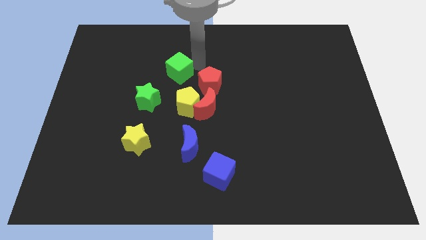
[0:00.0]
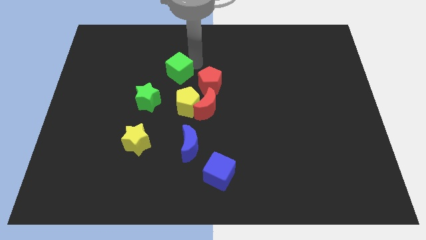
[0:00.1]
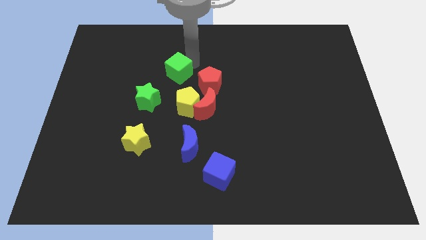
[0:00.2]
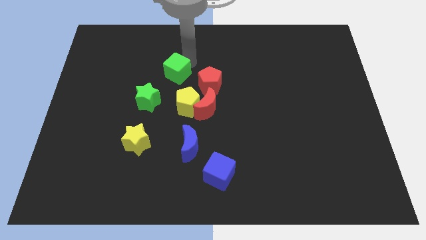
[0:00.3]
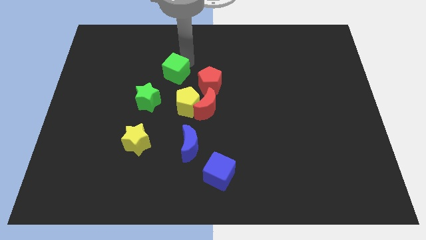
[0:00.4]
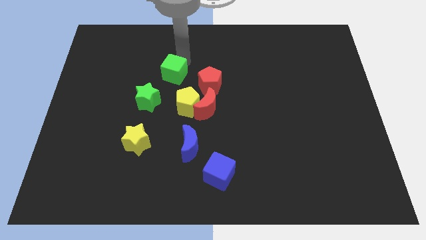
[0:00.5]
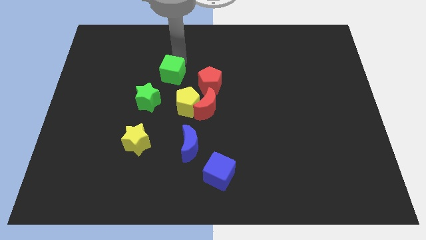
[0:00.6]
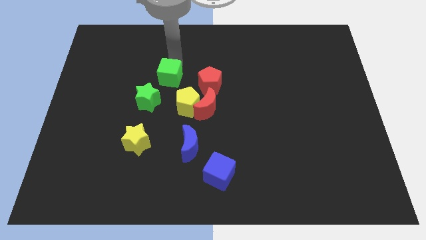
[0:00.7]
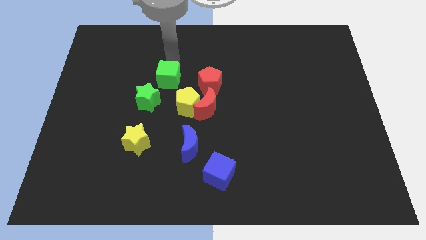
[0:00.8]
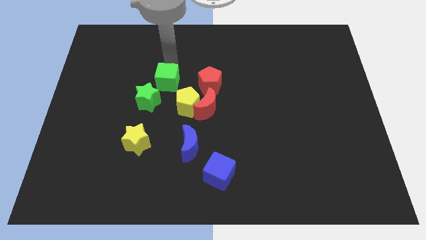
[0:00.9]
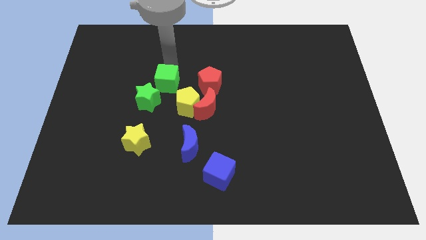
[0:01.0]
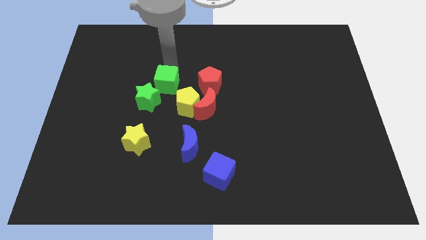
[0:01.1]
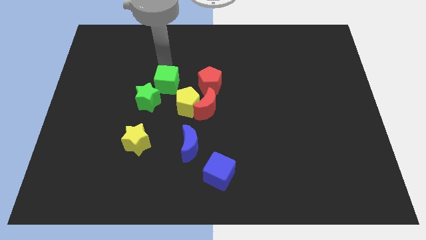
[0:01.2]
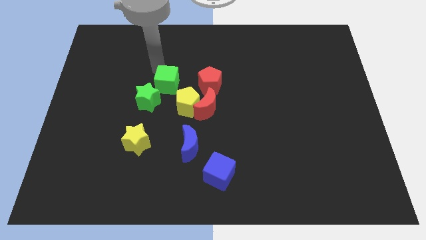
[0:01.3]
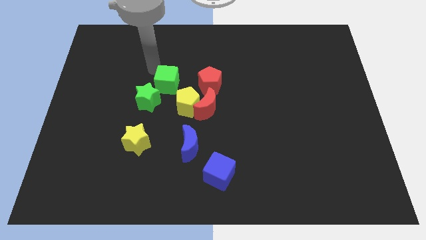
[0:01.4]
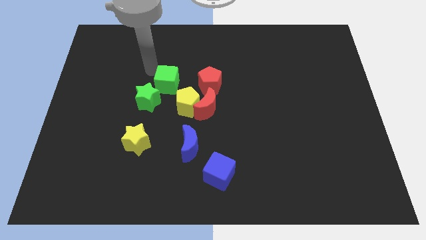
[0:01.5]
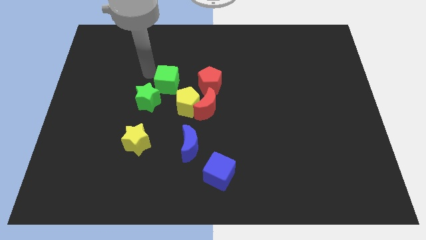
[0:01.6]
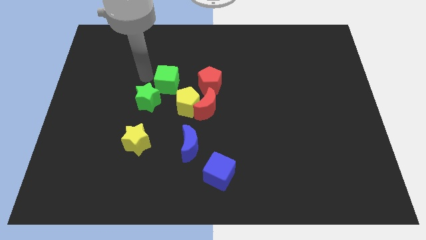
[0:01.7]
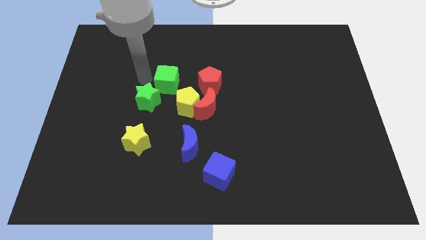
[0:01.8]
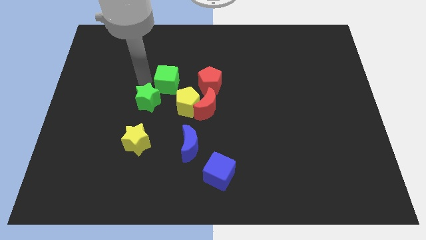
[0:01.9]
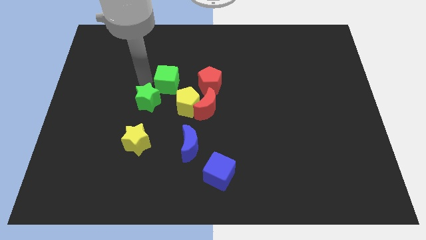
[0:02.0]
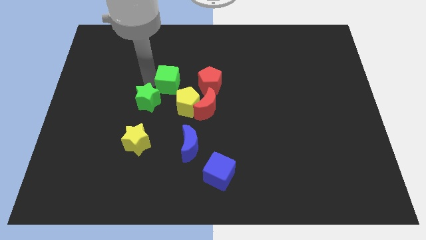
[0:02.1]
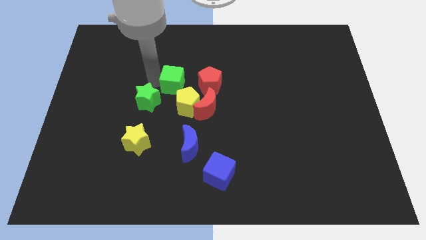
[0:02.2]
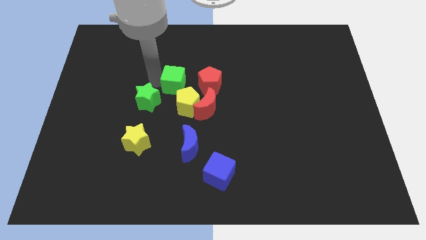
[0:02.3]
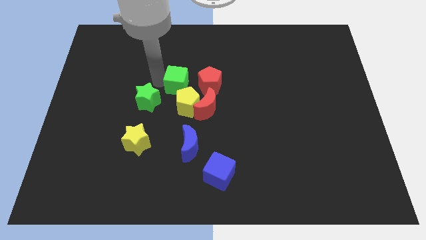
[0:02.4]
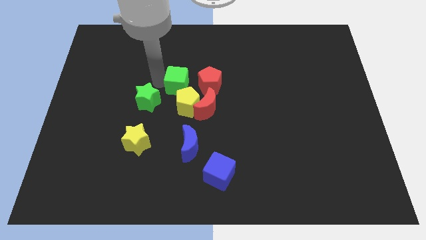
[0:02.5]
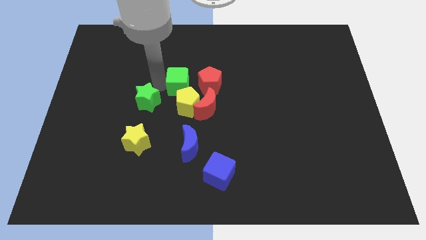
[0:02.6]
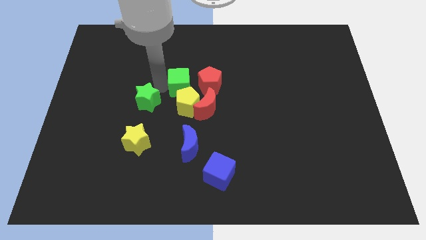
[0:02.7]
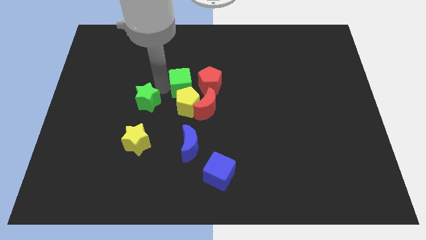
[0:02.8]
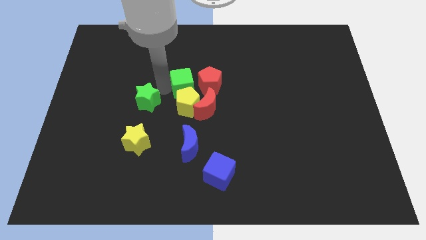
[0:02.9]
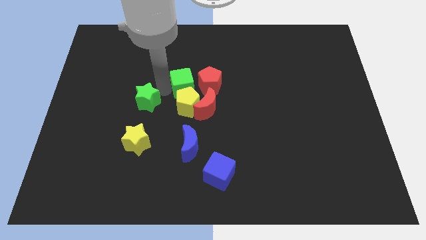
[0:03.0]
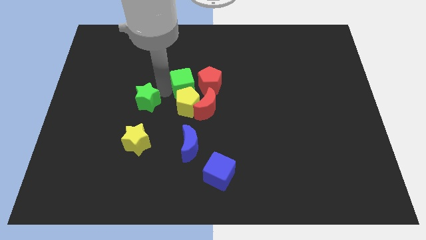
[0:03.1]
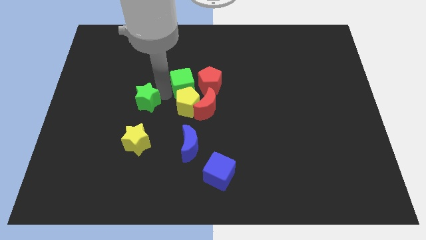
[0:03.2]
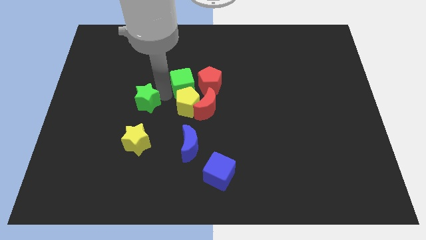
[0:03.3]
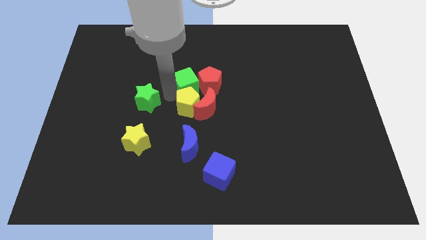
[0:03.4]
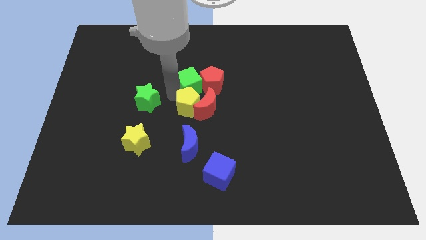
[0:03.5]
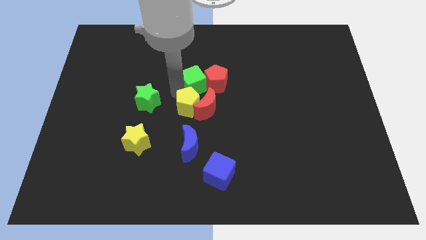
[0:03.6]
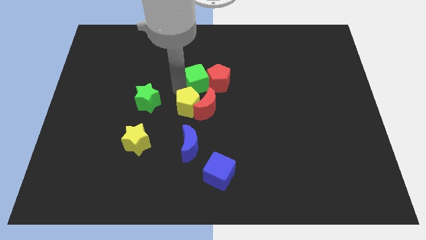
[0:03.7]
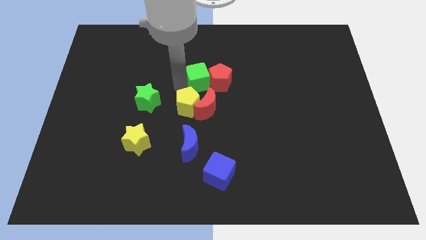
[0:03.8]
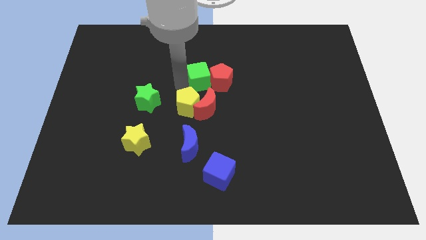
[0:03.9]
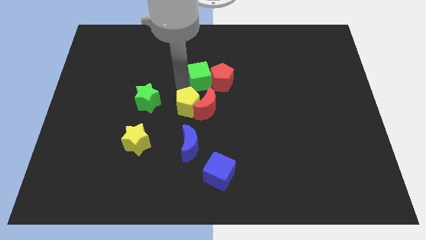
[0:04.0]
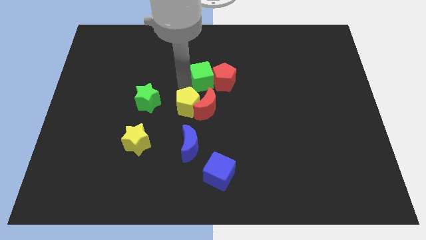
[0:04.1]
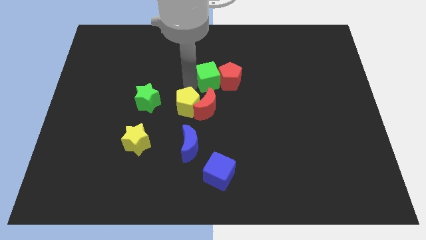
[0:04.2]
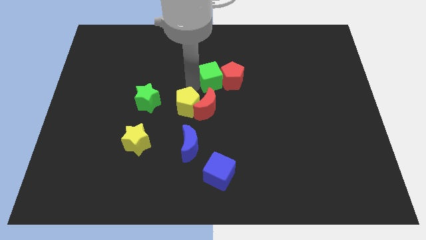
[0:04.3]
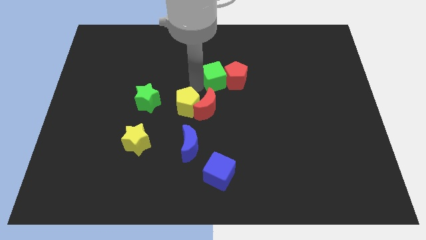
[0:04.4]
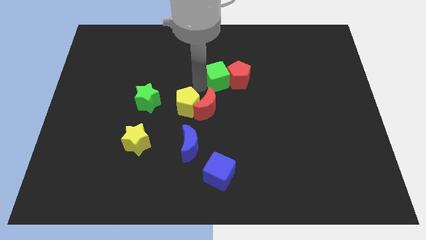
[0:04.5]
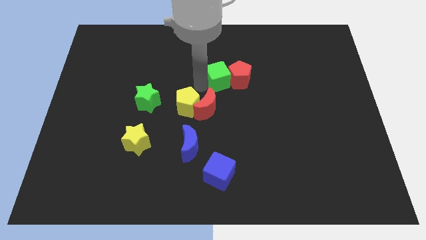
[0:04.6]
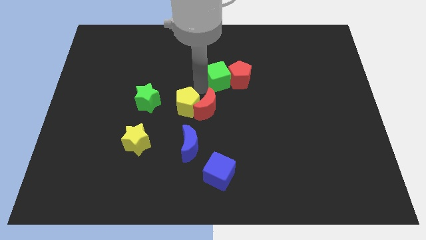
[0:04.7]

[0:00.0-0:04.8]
push the green cube on top of the red crescent

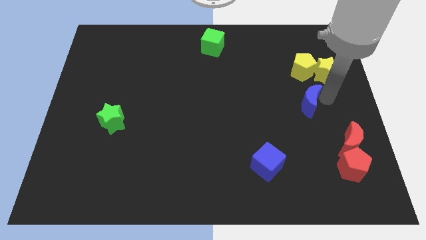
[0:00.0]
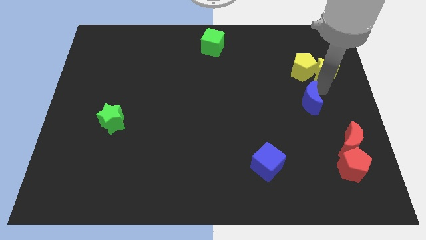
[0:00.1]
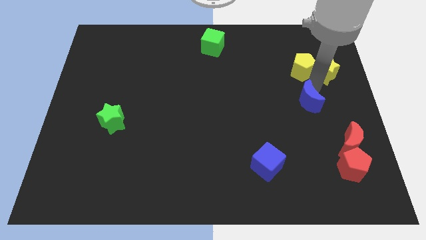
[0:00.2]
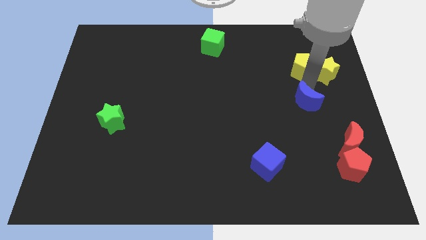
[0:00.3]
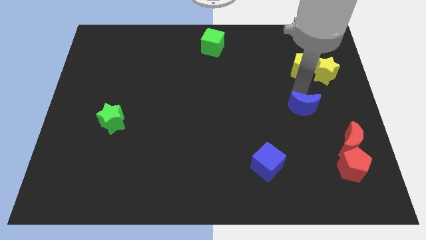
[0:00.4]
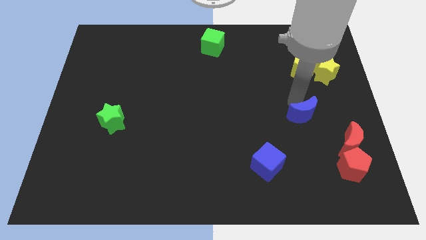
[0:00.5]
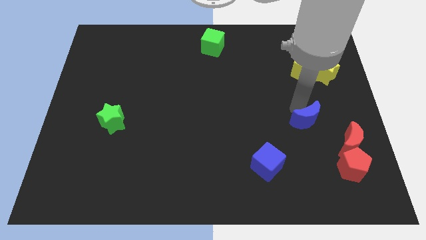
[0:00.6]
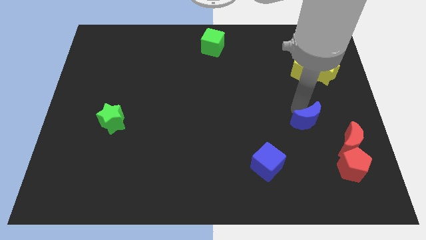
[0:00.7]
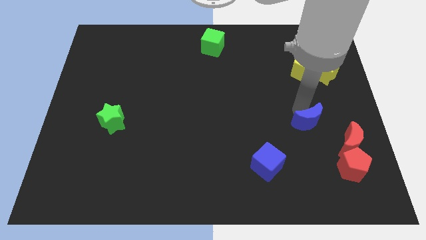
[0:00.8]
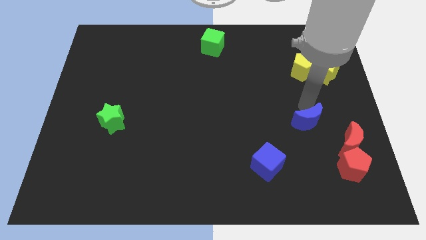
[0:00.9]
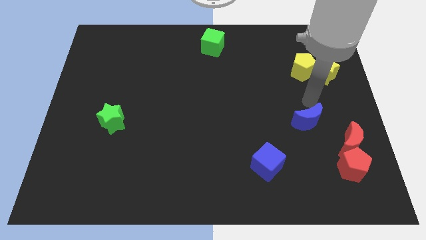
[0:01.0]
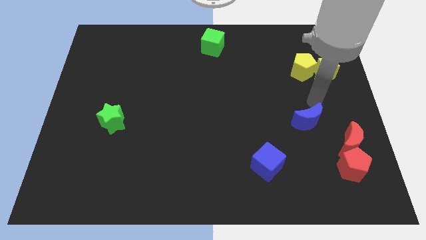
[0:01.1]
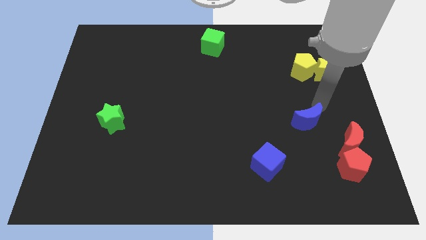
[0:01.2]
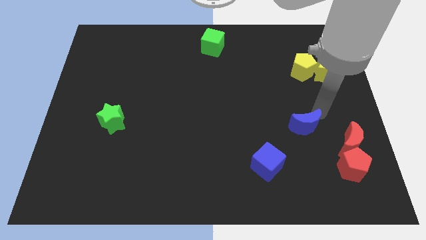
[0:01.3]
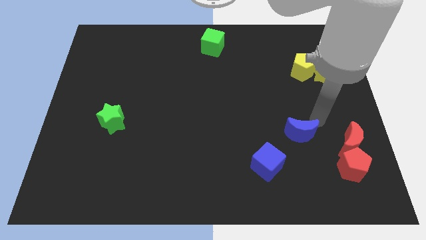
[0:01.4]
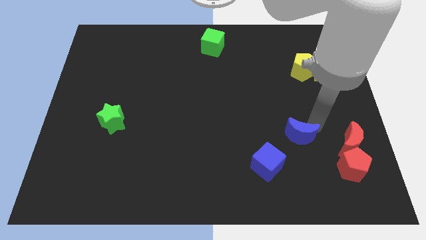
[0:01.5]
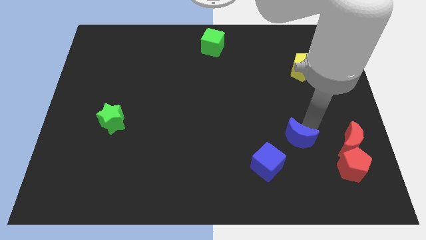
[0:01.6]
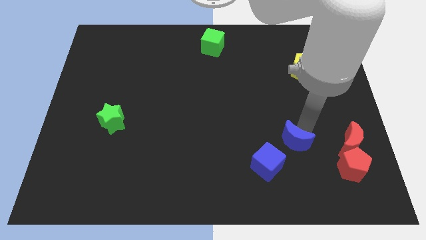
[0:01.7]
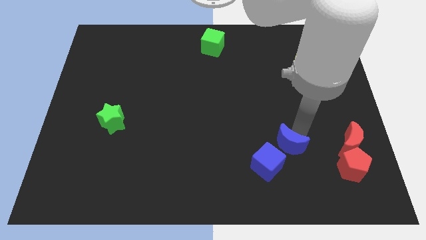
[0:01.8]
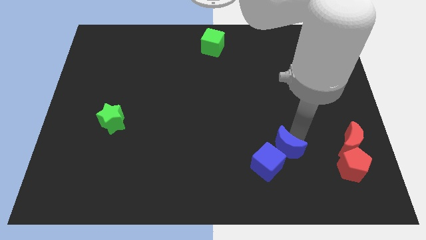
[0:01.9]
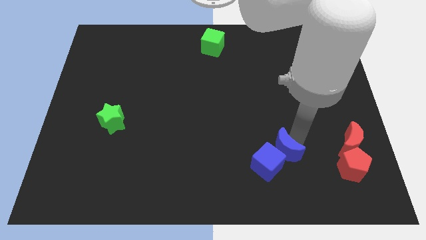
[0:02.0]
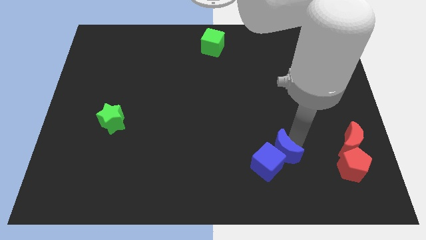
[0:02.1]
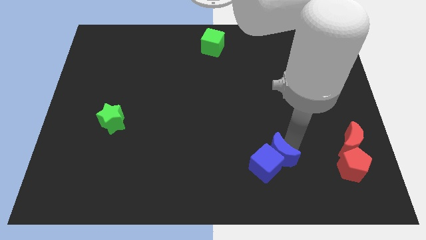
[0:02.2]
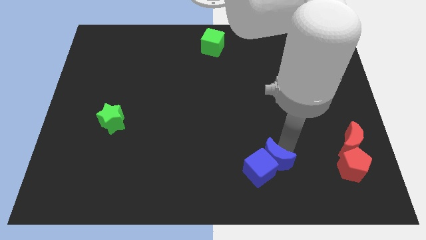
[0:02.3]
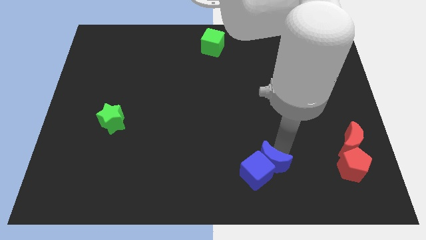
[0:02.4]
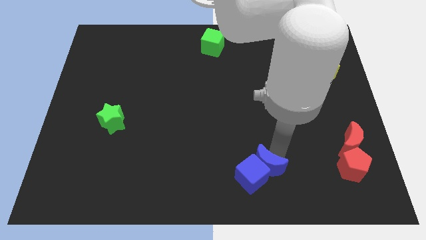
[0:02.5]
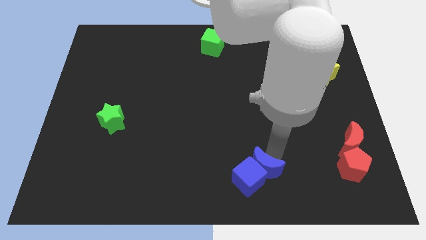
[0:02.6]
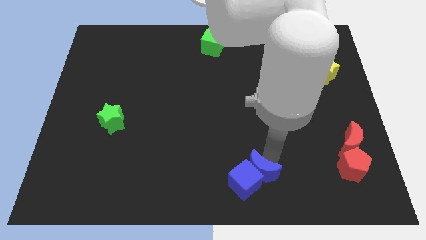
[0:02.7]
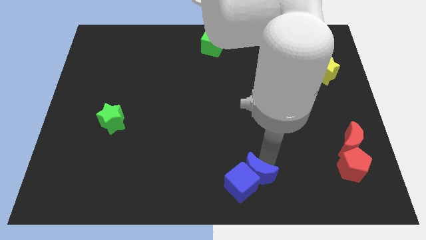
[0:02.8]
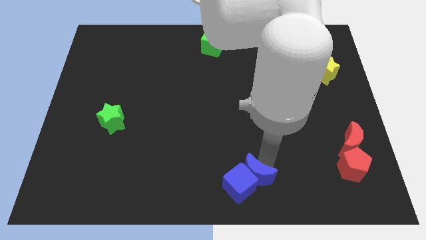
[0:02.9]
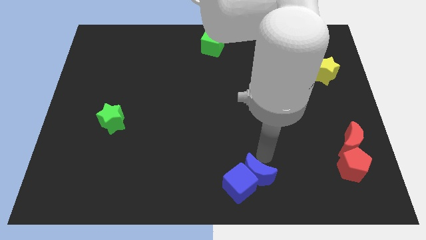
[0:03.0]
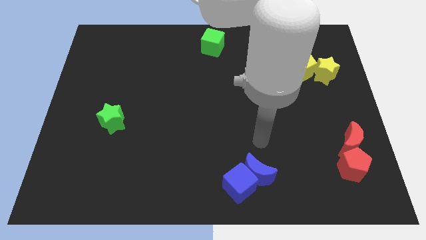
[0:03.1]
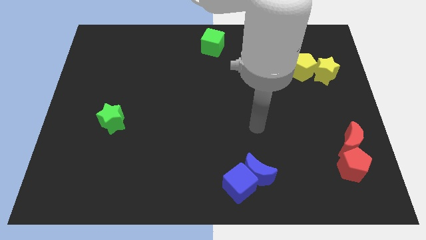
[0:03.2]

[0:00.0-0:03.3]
move the blue crescent diagonal to the blue cube

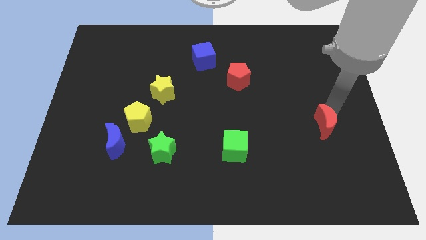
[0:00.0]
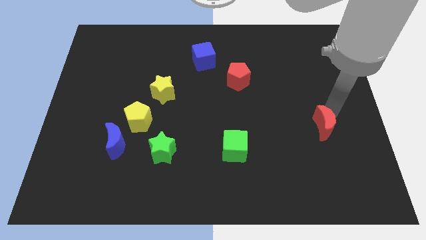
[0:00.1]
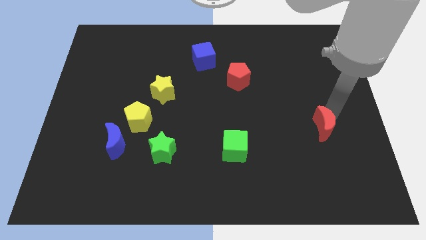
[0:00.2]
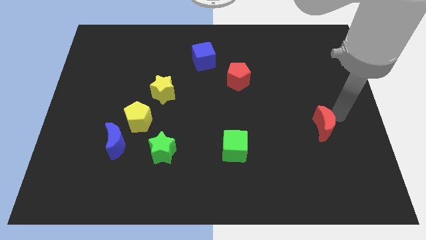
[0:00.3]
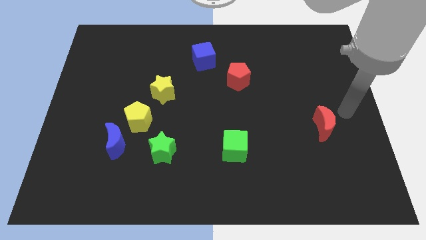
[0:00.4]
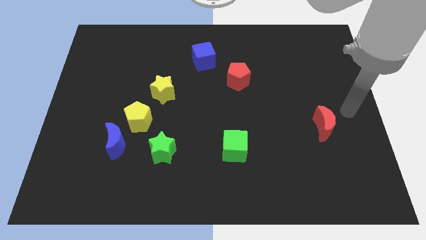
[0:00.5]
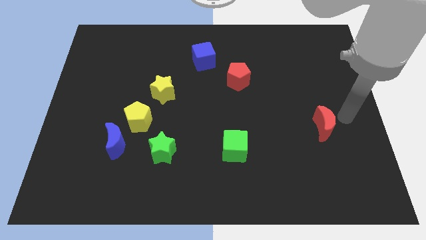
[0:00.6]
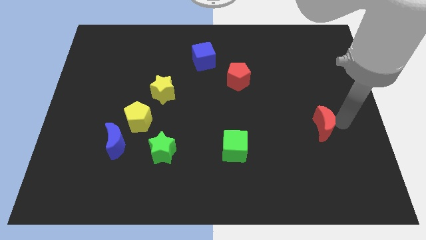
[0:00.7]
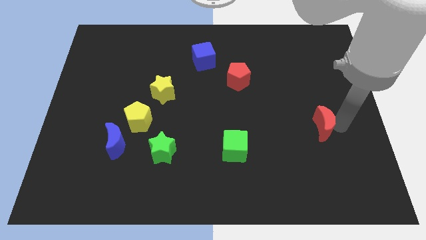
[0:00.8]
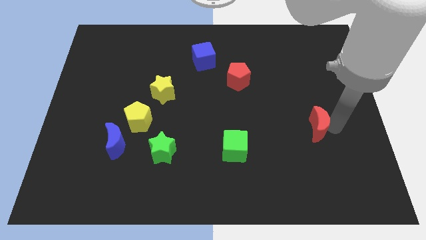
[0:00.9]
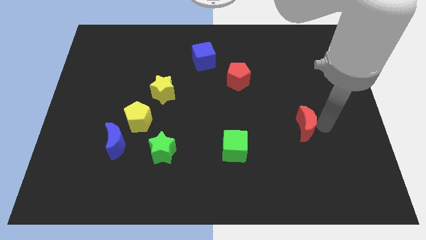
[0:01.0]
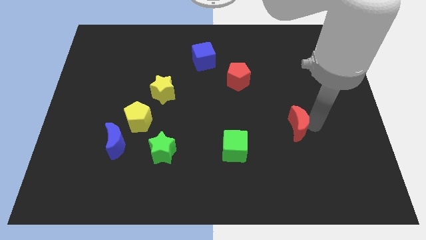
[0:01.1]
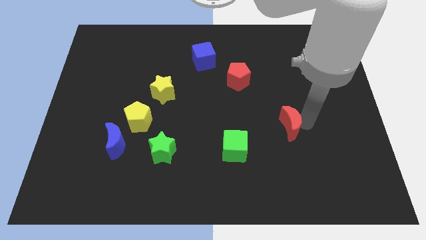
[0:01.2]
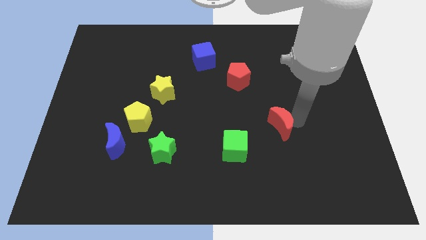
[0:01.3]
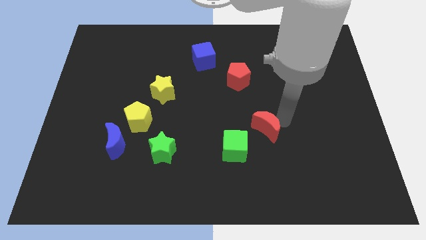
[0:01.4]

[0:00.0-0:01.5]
move red moon close to the green cube
